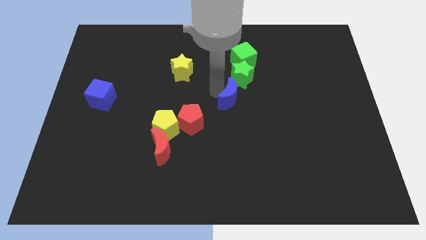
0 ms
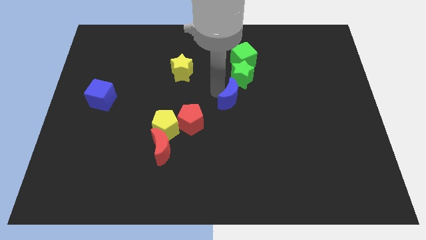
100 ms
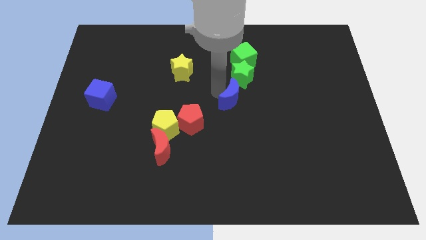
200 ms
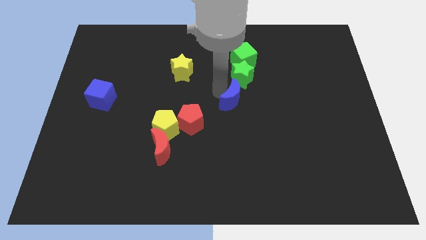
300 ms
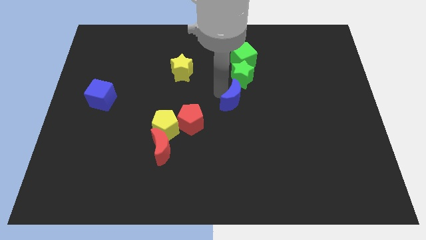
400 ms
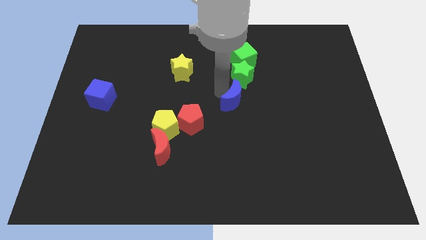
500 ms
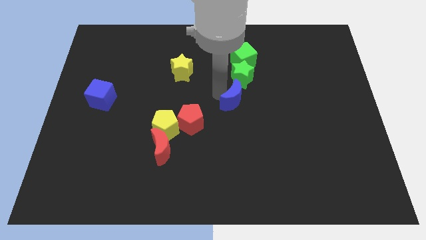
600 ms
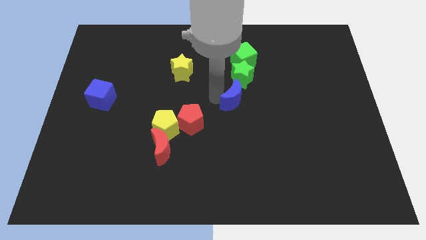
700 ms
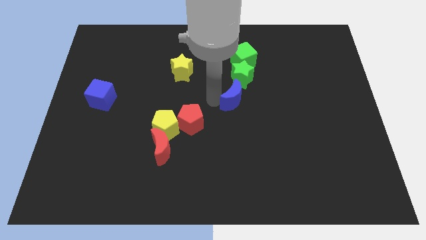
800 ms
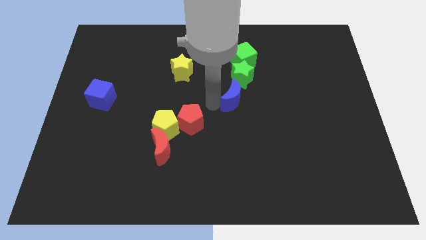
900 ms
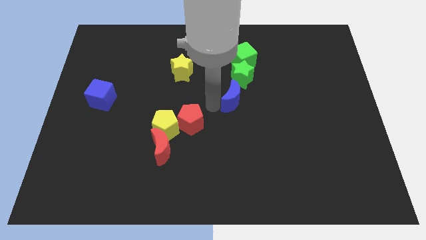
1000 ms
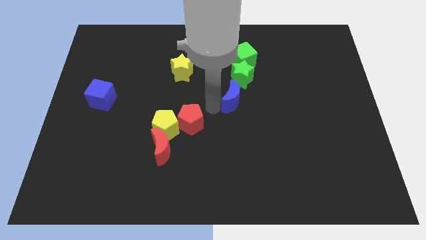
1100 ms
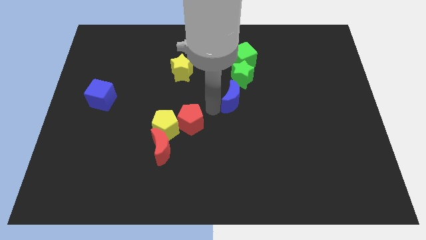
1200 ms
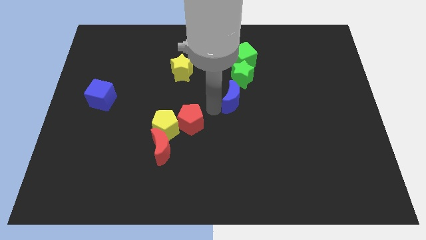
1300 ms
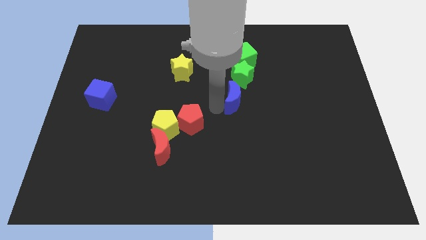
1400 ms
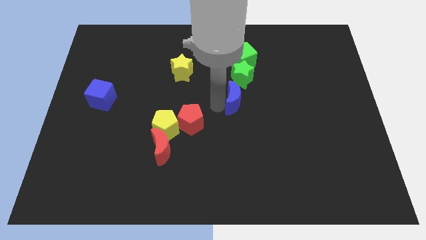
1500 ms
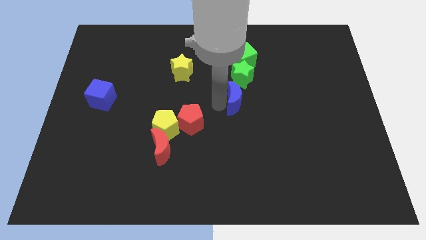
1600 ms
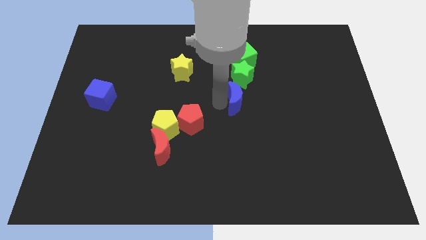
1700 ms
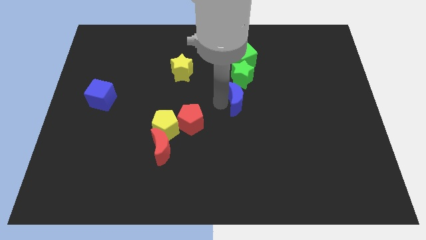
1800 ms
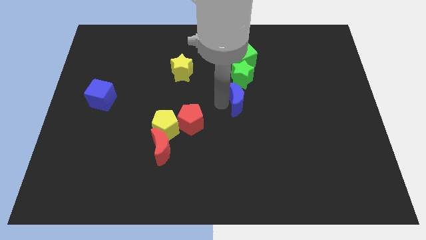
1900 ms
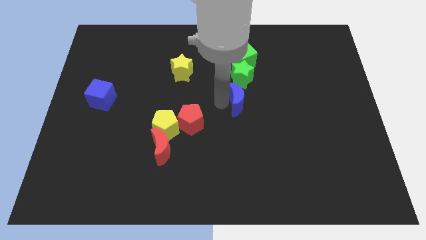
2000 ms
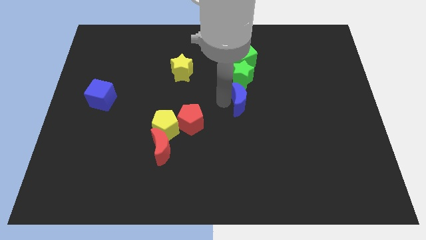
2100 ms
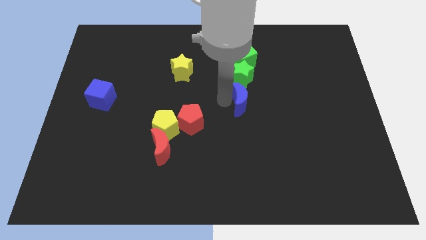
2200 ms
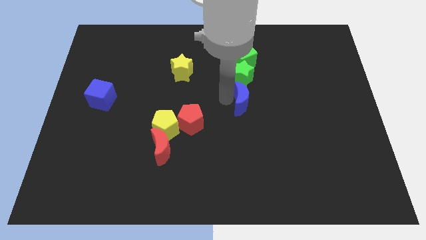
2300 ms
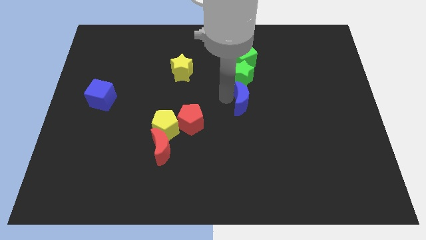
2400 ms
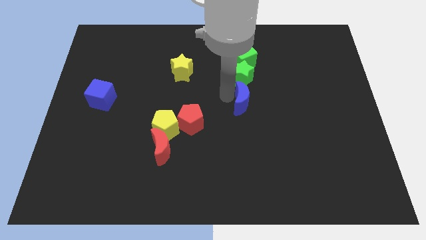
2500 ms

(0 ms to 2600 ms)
push the blue crescent to the bottom of the green star

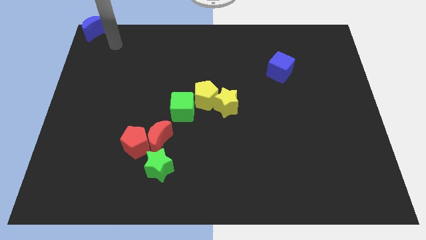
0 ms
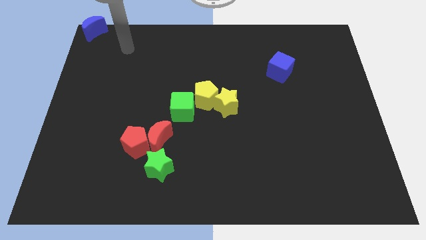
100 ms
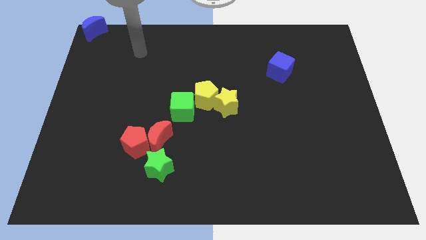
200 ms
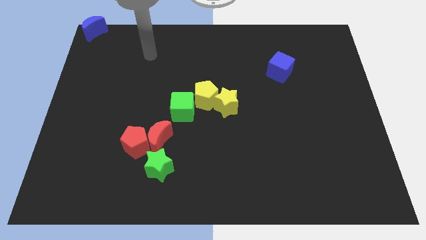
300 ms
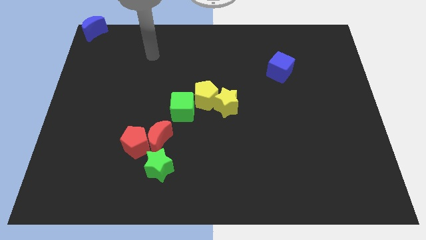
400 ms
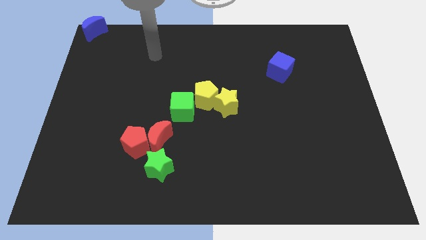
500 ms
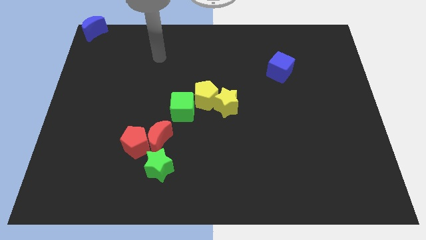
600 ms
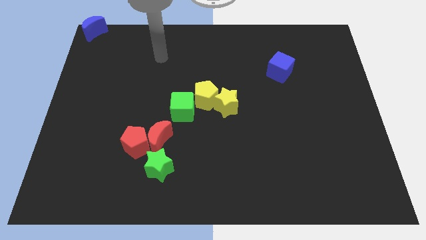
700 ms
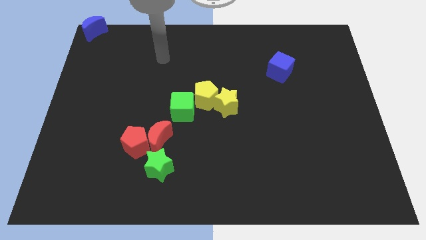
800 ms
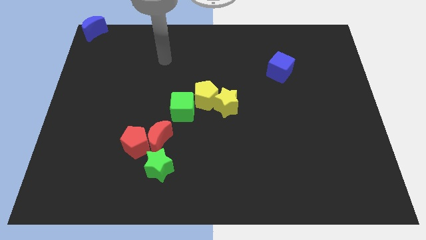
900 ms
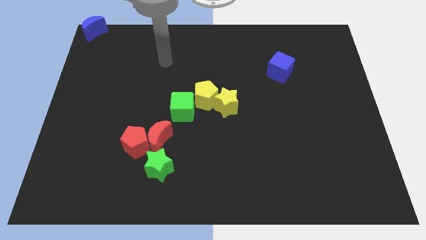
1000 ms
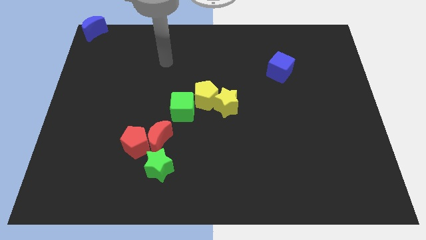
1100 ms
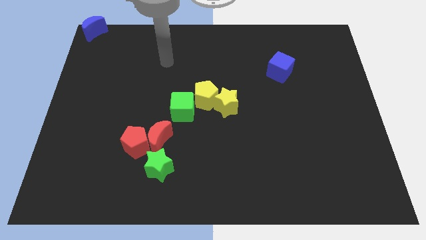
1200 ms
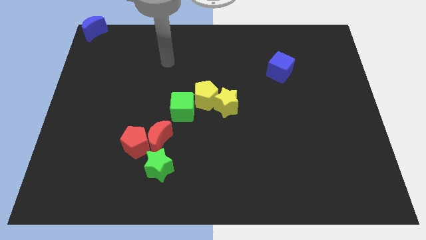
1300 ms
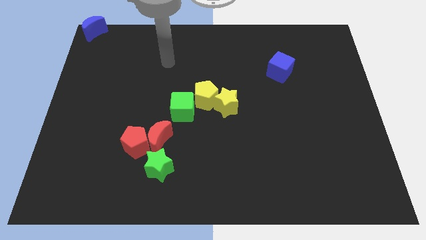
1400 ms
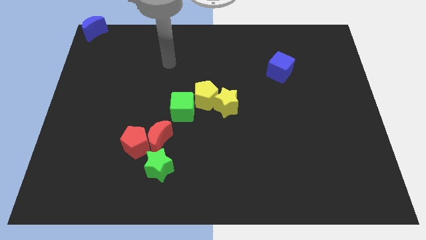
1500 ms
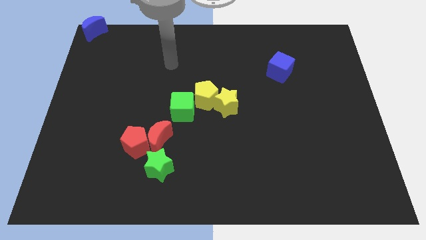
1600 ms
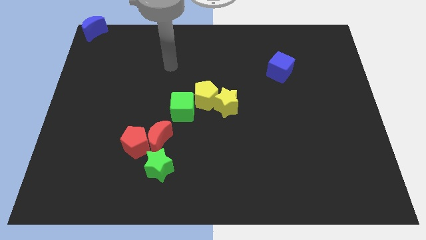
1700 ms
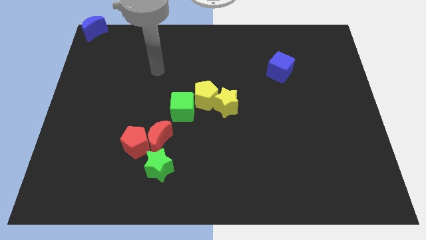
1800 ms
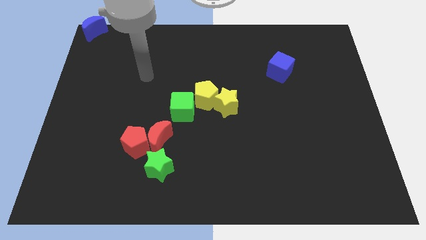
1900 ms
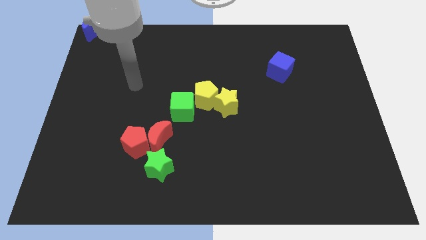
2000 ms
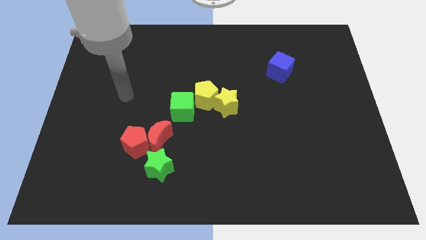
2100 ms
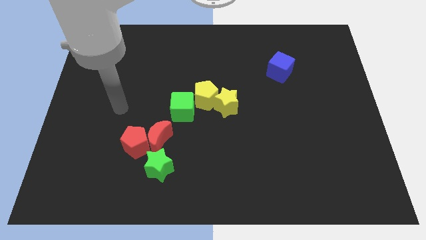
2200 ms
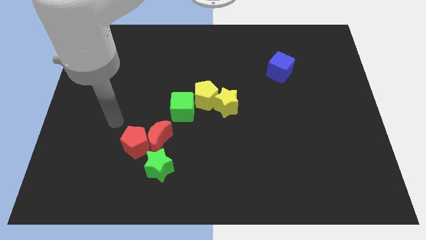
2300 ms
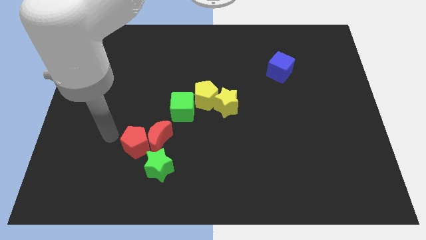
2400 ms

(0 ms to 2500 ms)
point your arm at the left of the red pentagon

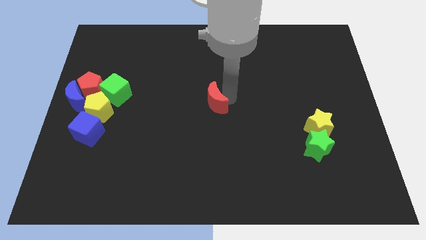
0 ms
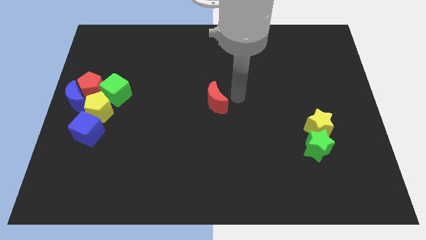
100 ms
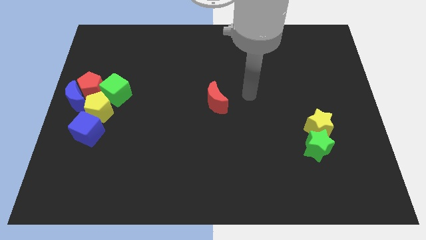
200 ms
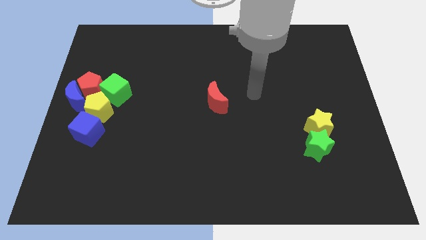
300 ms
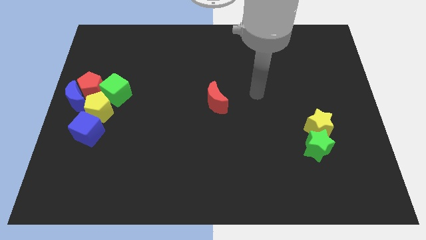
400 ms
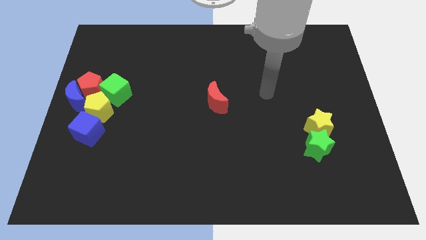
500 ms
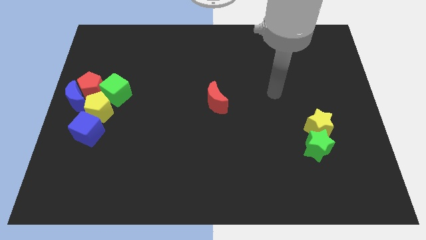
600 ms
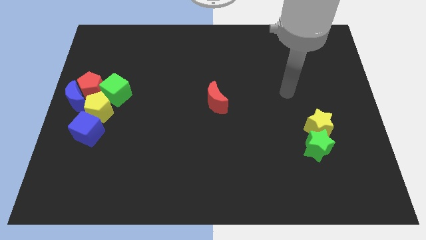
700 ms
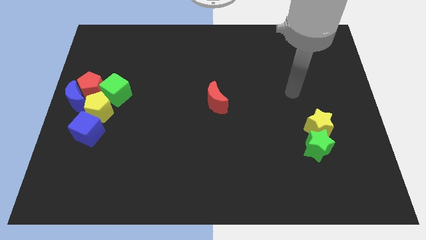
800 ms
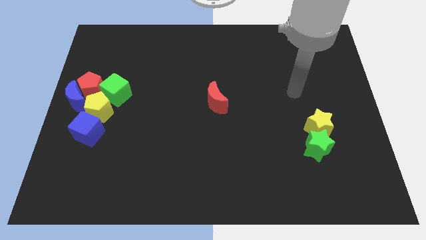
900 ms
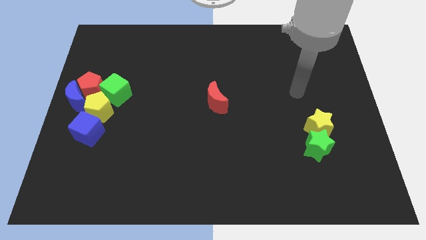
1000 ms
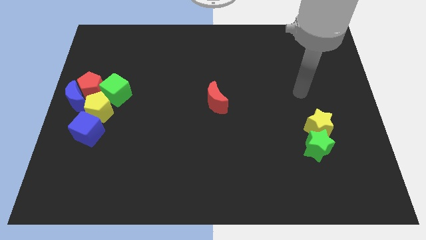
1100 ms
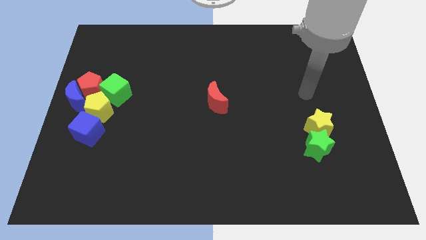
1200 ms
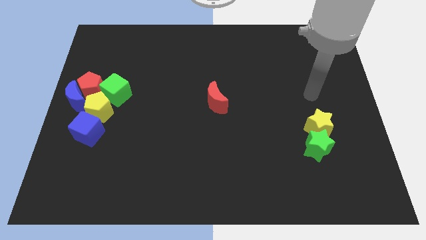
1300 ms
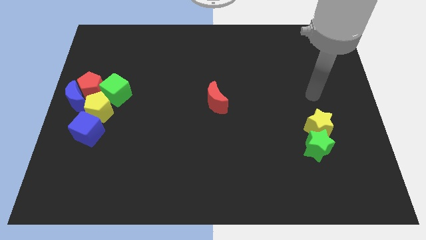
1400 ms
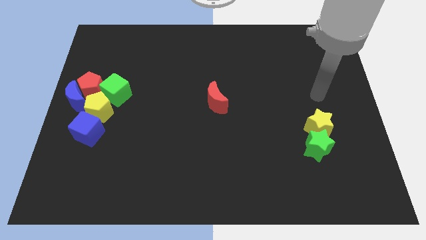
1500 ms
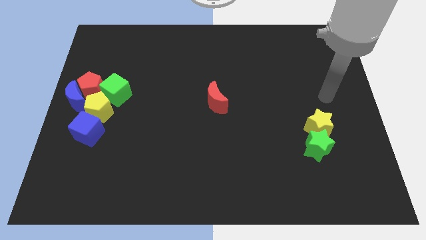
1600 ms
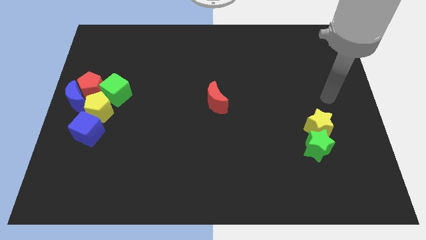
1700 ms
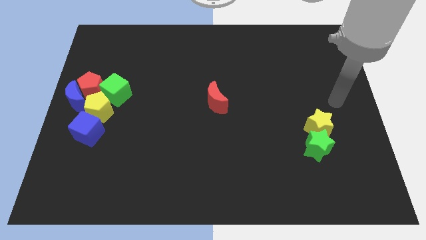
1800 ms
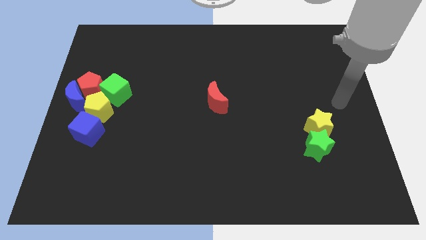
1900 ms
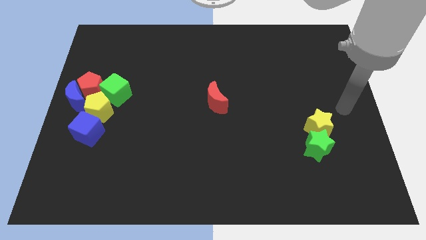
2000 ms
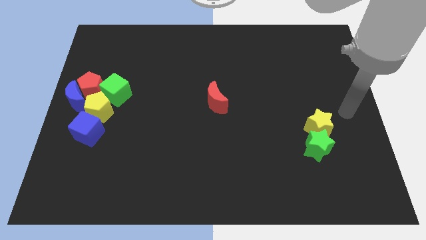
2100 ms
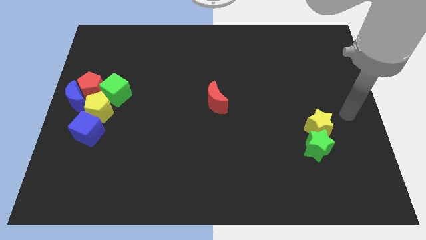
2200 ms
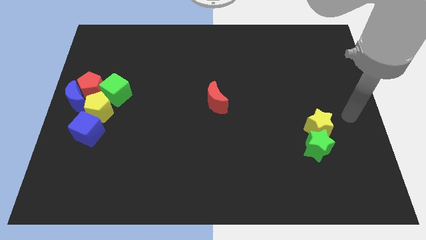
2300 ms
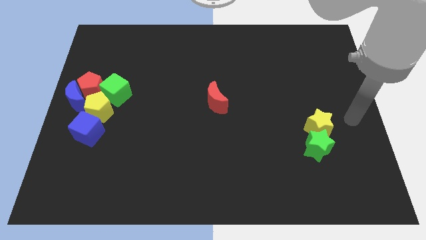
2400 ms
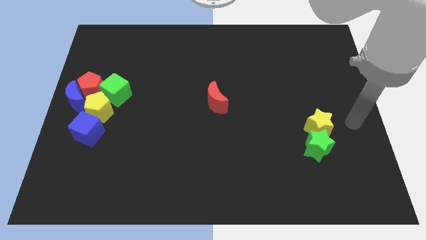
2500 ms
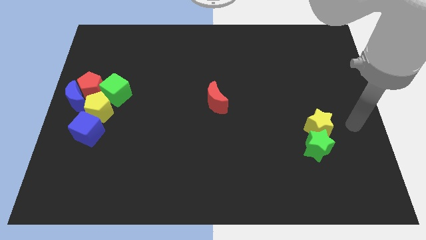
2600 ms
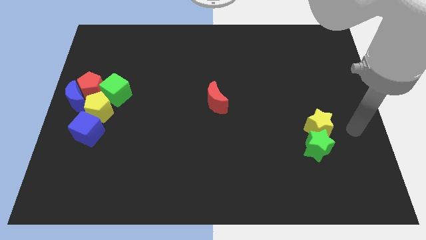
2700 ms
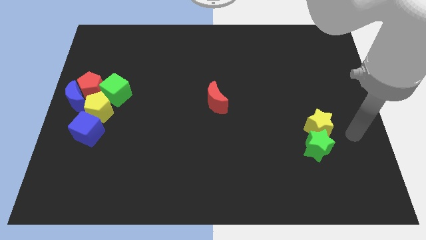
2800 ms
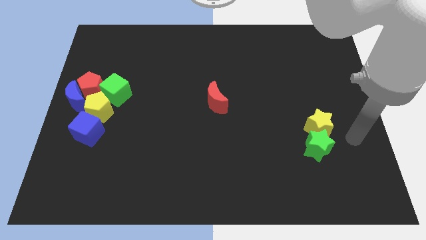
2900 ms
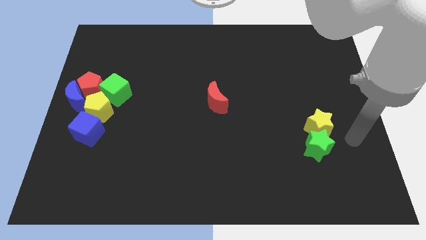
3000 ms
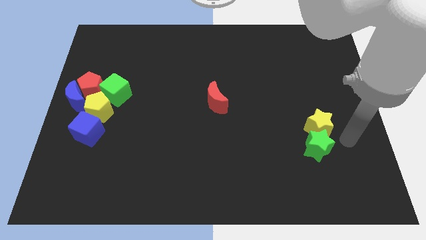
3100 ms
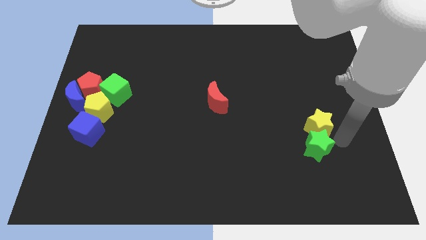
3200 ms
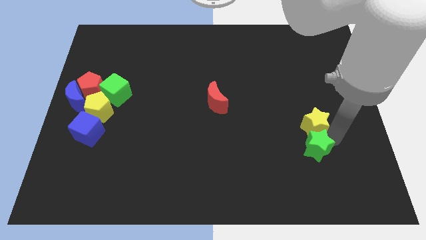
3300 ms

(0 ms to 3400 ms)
move your arm near to the yellow and green stars

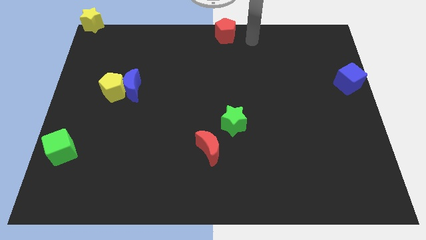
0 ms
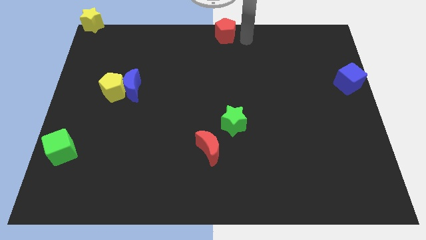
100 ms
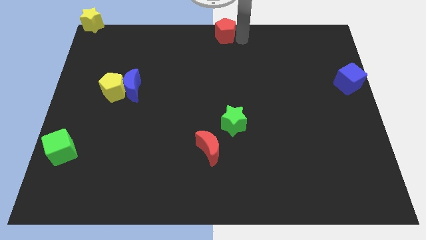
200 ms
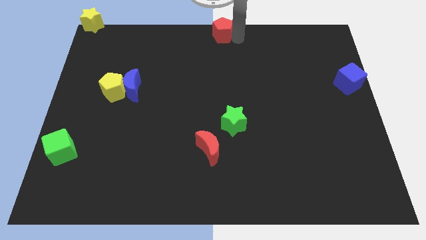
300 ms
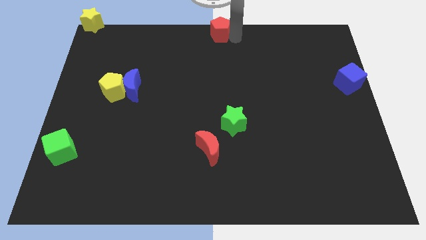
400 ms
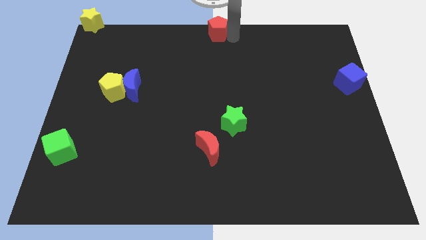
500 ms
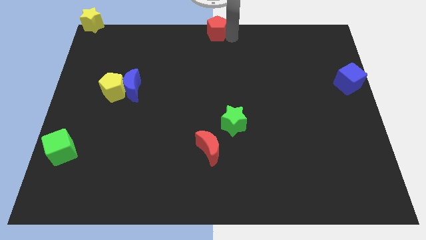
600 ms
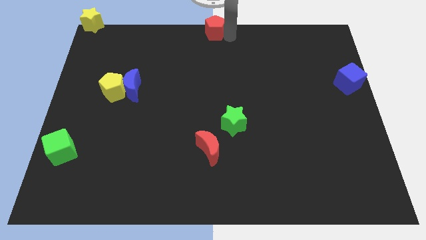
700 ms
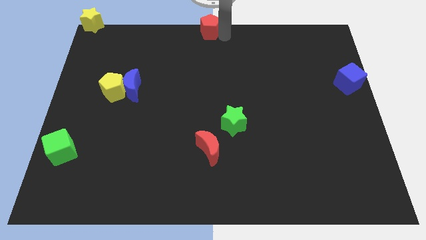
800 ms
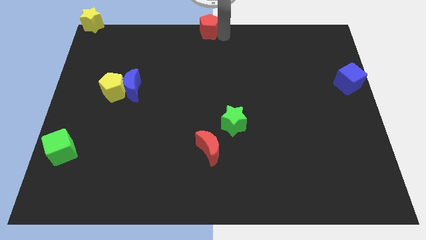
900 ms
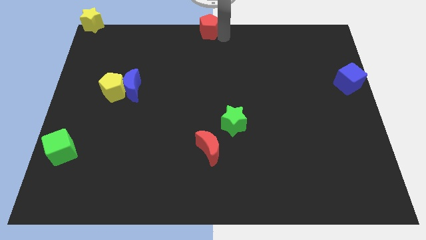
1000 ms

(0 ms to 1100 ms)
place red pentagon at the top center of the board
